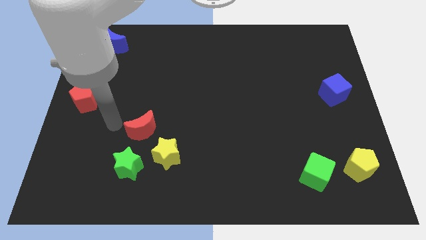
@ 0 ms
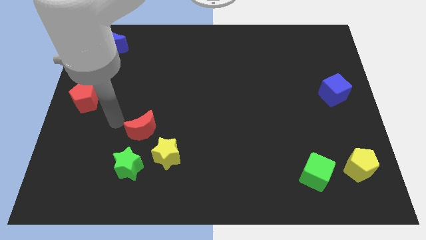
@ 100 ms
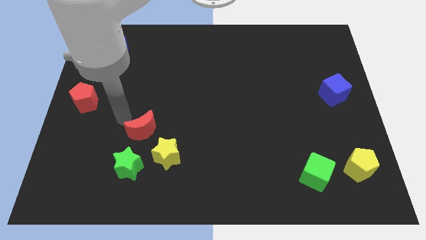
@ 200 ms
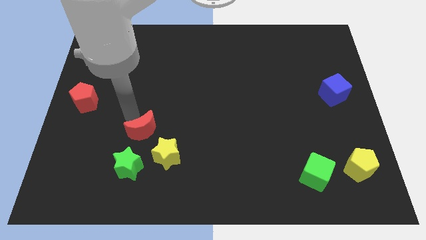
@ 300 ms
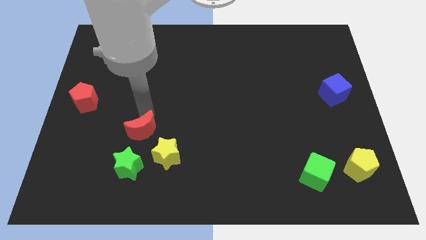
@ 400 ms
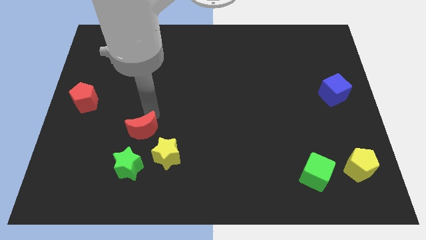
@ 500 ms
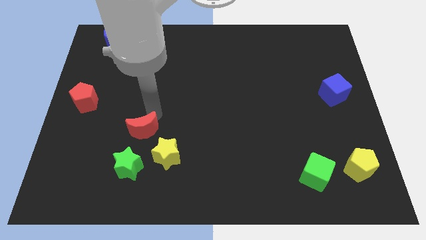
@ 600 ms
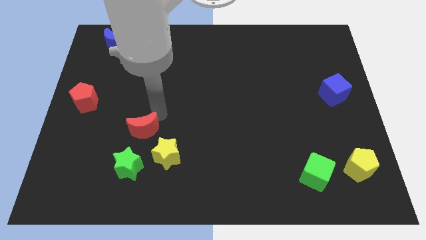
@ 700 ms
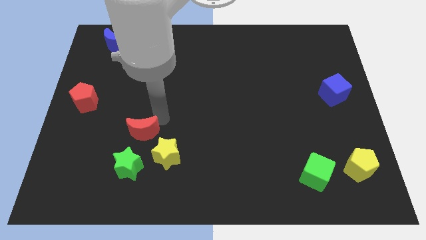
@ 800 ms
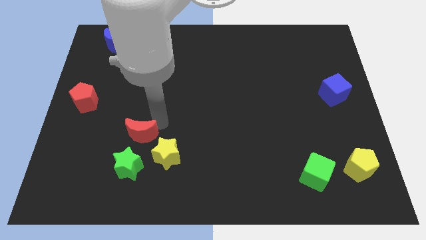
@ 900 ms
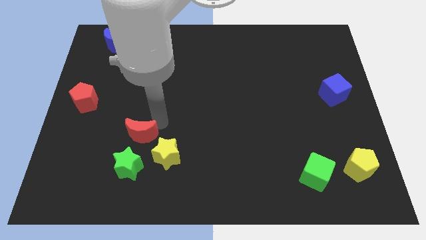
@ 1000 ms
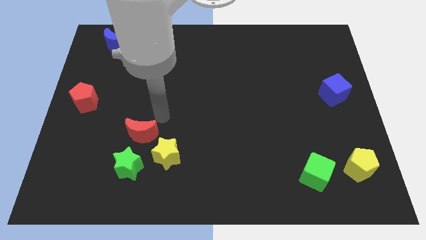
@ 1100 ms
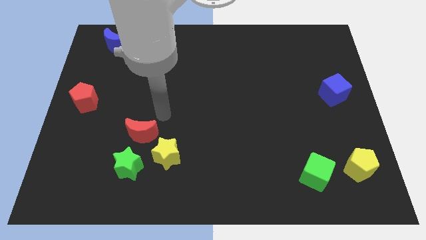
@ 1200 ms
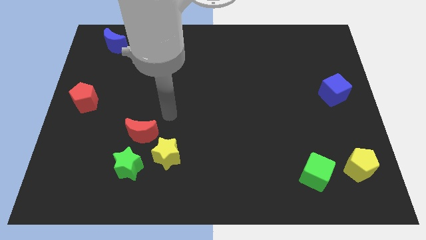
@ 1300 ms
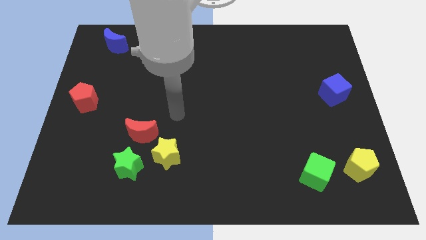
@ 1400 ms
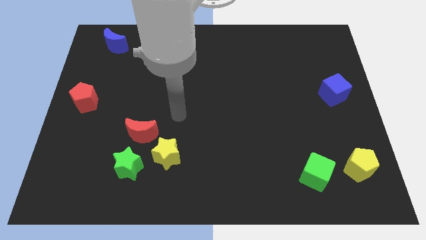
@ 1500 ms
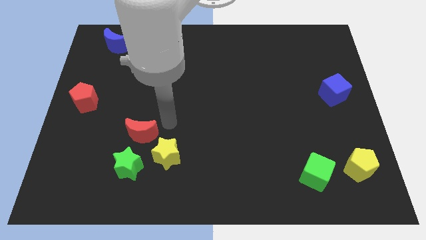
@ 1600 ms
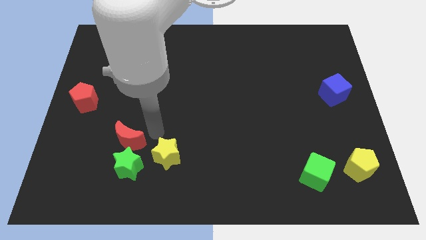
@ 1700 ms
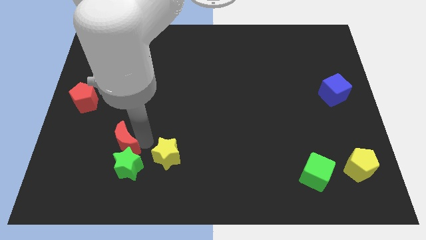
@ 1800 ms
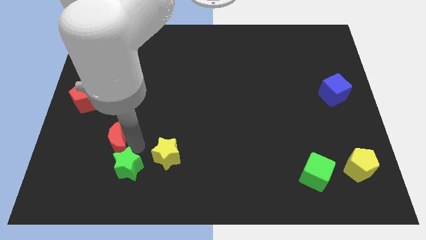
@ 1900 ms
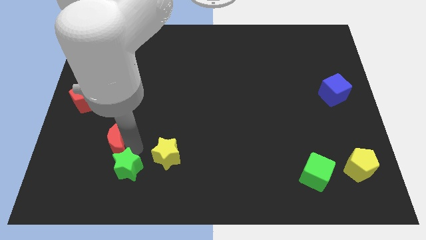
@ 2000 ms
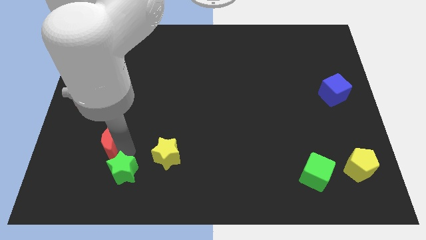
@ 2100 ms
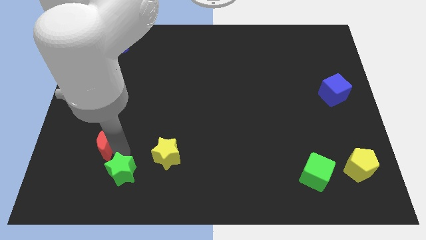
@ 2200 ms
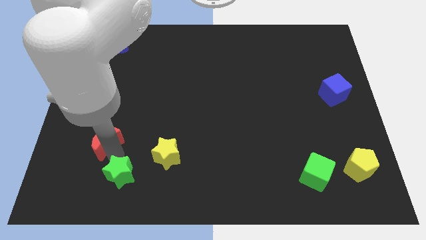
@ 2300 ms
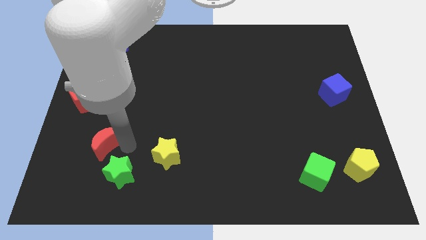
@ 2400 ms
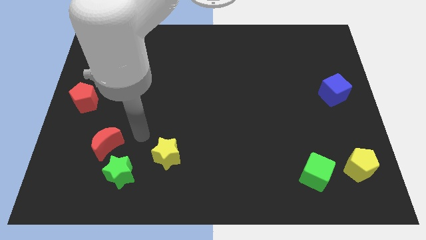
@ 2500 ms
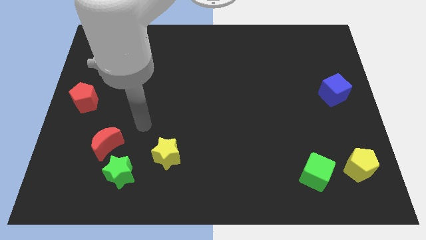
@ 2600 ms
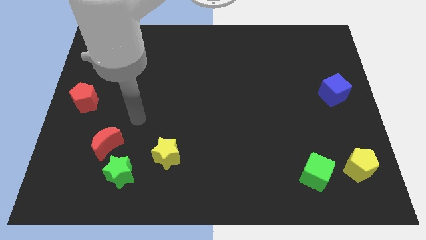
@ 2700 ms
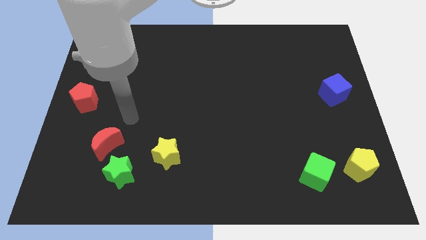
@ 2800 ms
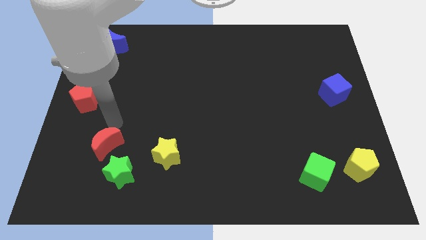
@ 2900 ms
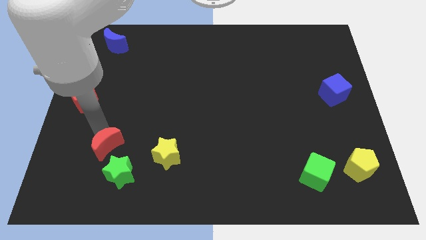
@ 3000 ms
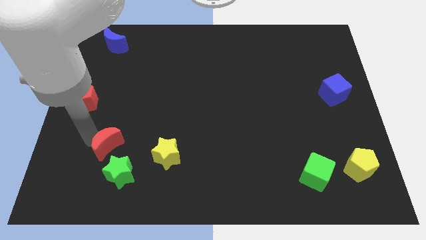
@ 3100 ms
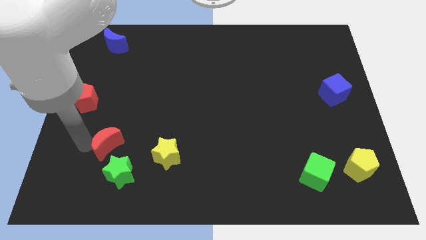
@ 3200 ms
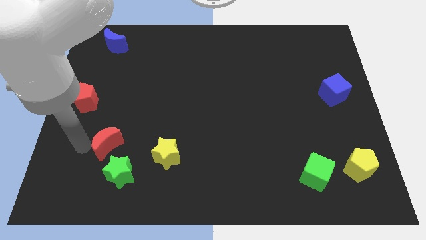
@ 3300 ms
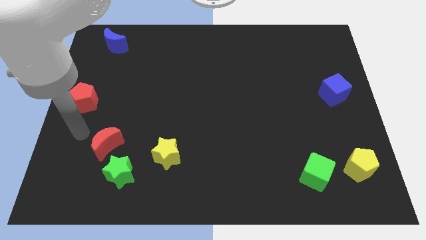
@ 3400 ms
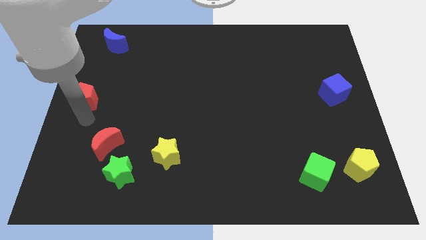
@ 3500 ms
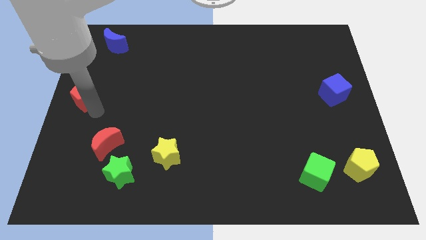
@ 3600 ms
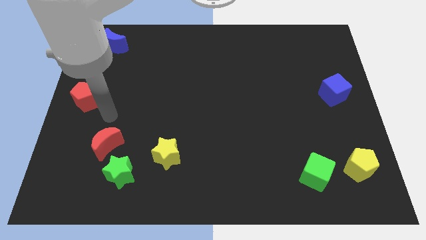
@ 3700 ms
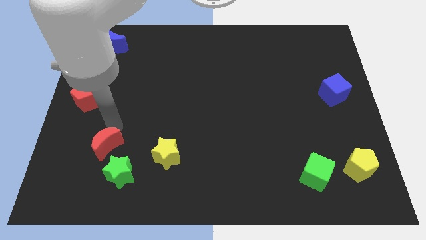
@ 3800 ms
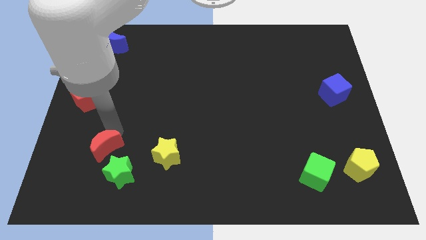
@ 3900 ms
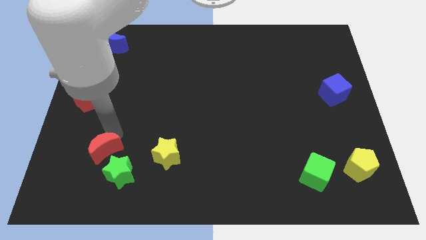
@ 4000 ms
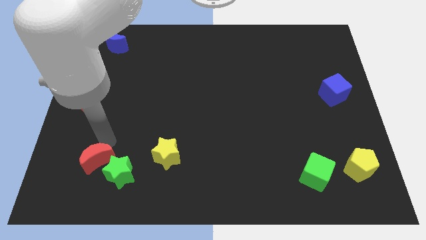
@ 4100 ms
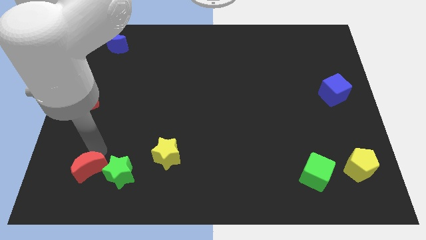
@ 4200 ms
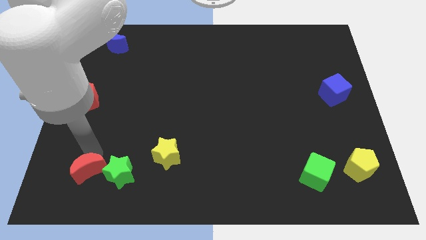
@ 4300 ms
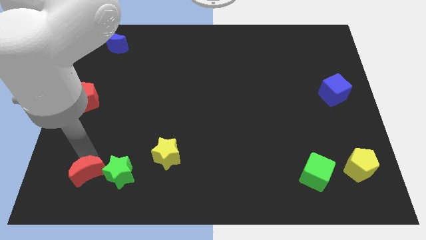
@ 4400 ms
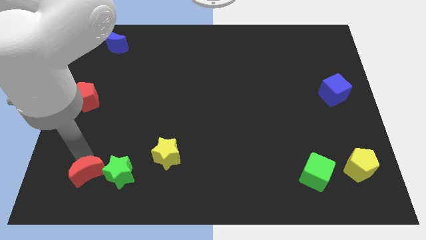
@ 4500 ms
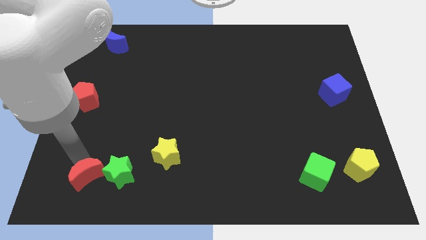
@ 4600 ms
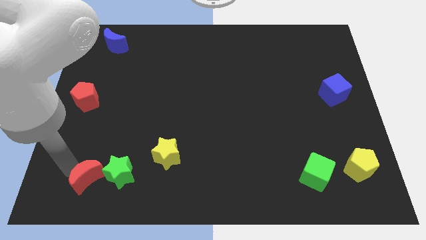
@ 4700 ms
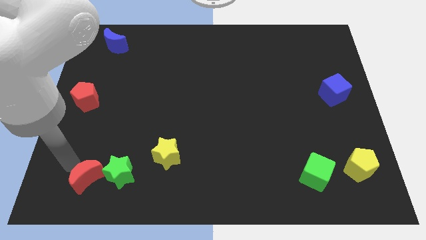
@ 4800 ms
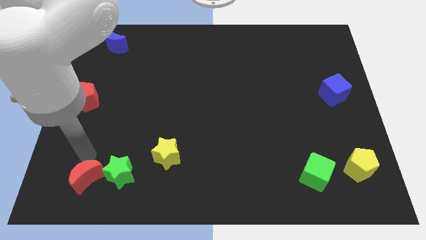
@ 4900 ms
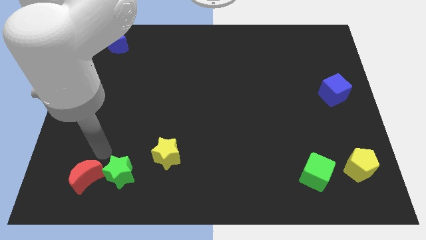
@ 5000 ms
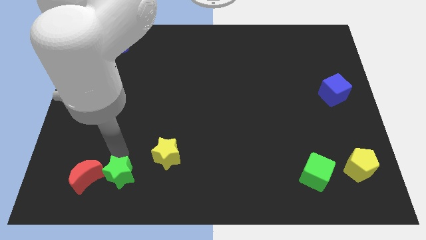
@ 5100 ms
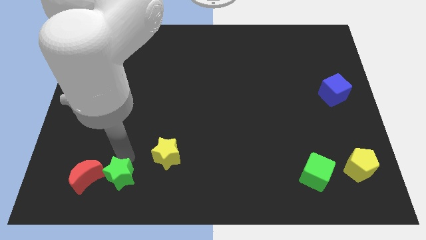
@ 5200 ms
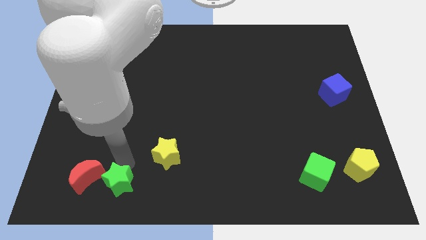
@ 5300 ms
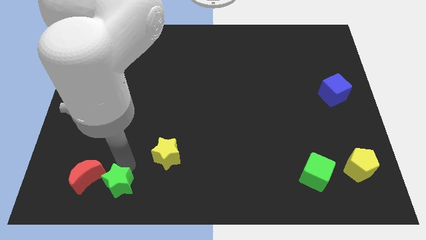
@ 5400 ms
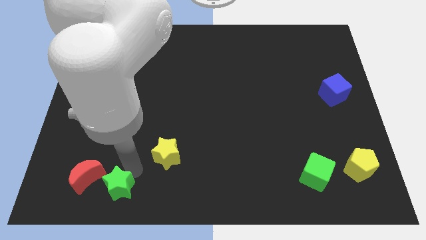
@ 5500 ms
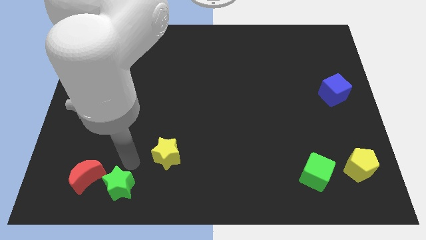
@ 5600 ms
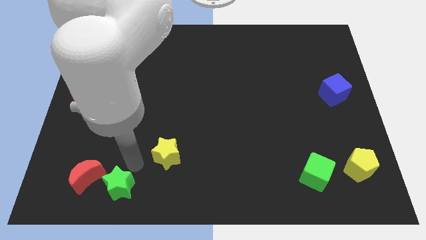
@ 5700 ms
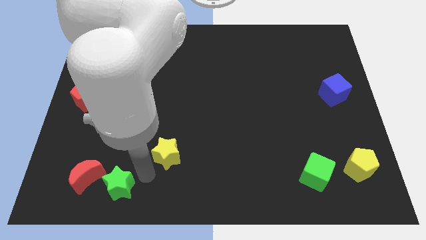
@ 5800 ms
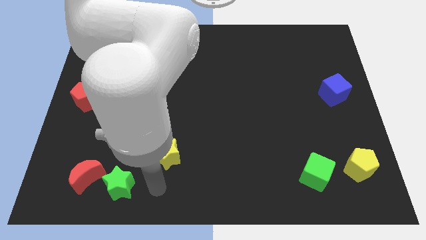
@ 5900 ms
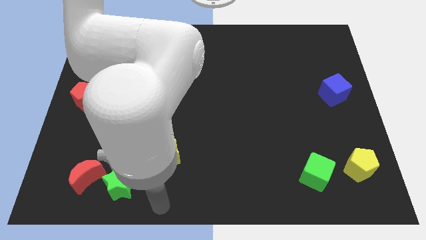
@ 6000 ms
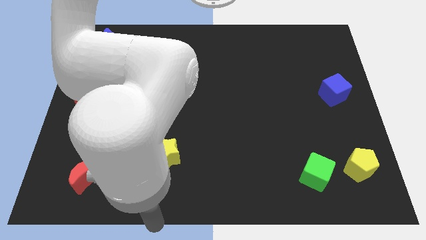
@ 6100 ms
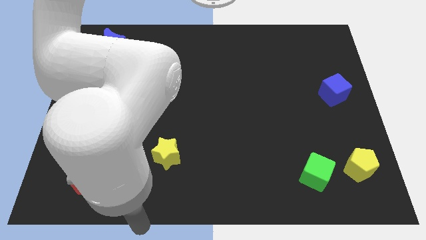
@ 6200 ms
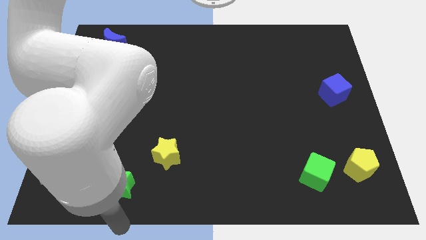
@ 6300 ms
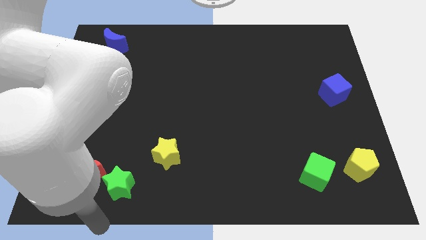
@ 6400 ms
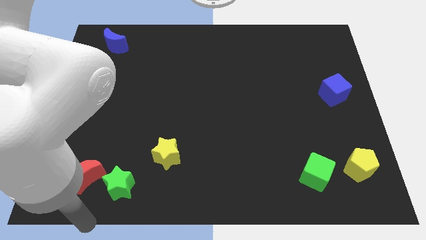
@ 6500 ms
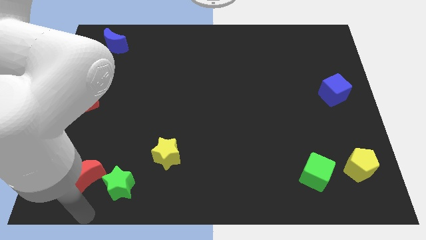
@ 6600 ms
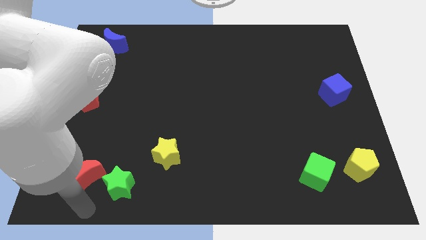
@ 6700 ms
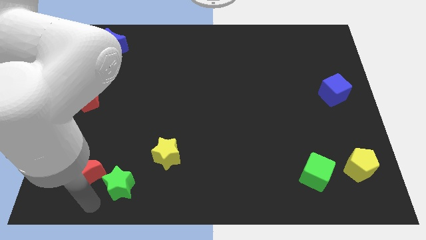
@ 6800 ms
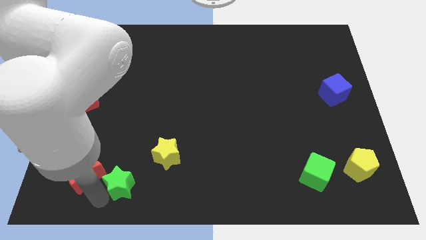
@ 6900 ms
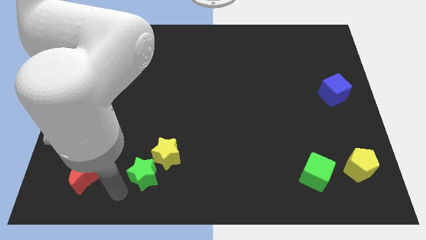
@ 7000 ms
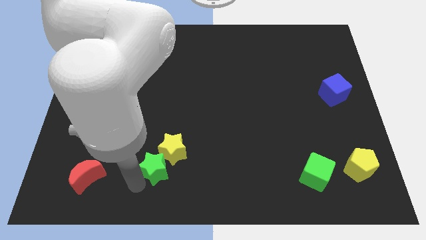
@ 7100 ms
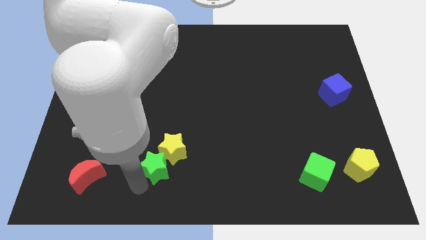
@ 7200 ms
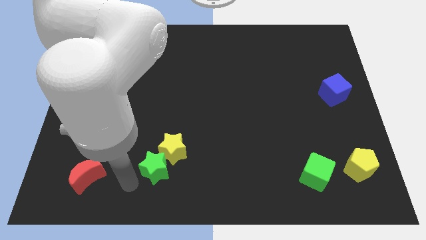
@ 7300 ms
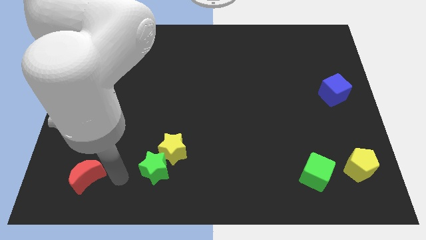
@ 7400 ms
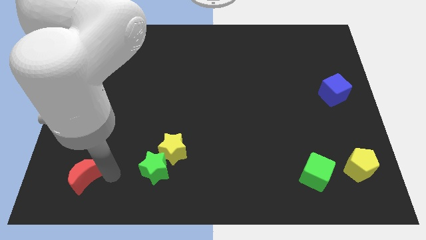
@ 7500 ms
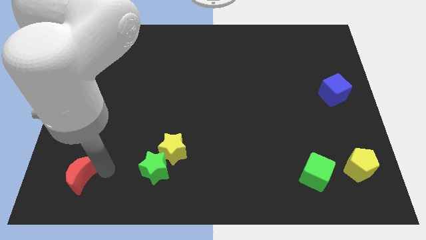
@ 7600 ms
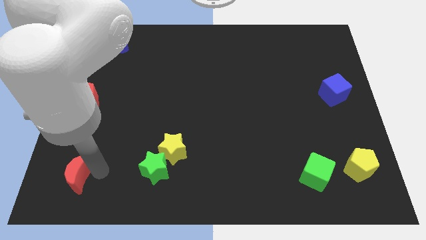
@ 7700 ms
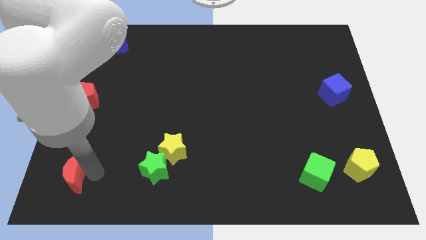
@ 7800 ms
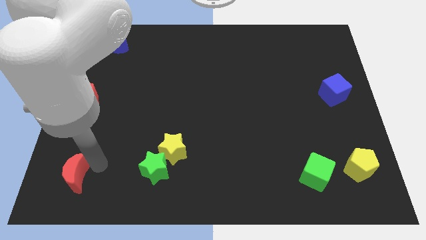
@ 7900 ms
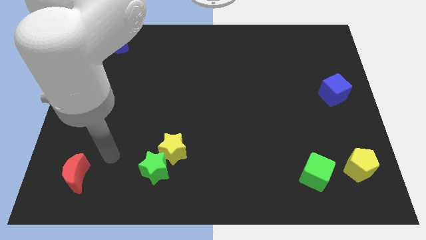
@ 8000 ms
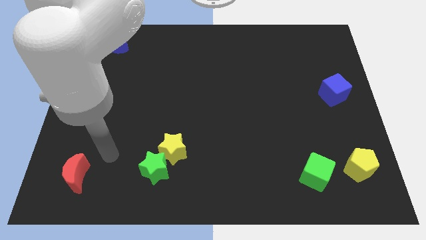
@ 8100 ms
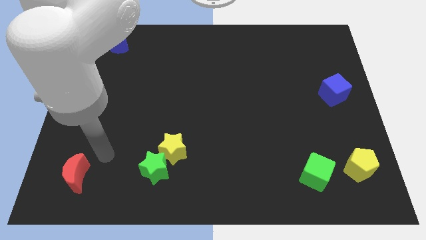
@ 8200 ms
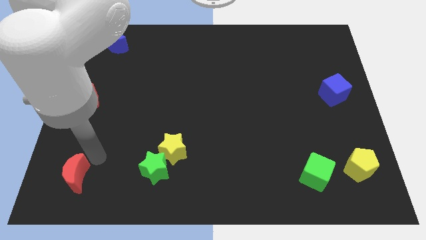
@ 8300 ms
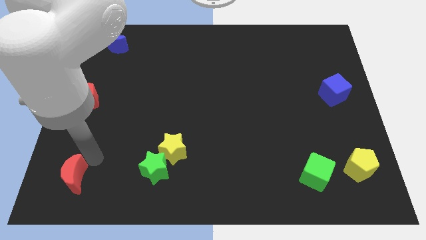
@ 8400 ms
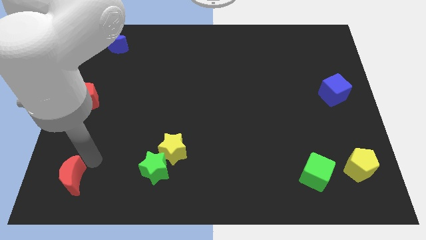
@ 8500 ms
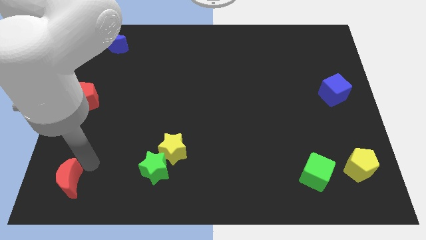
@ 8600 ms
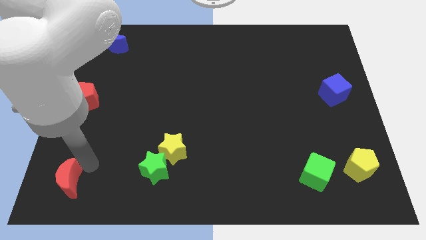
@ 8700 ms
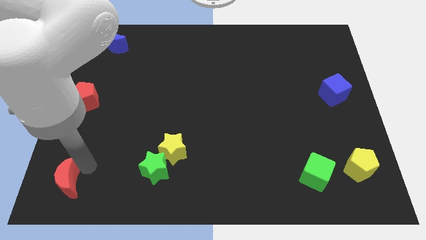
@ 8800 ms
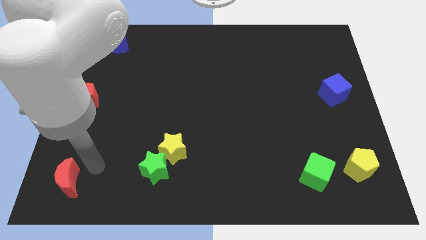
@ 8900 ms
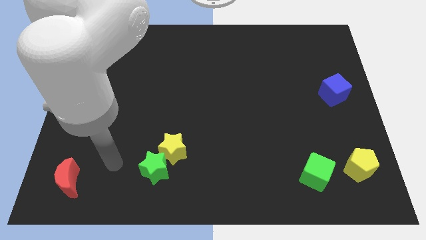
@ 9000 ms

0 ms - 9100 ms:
place the red crescent at the left bottom of the corner
